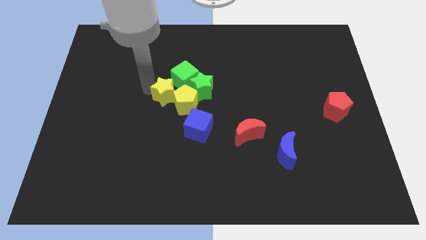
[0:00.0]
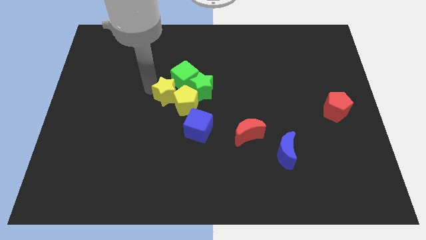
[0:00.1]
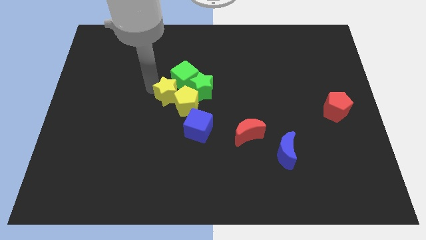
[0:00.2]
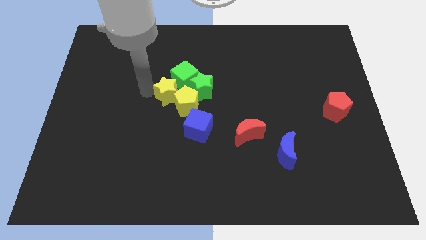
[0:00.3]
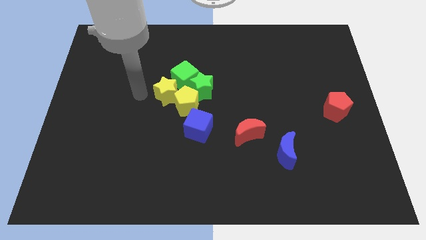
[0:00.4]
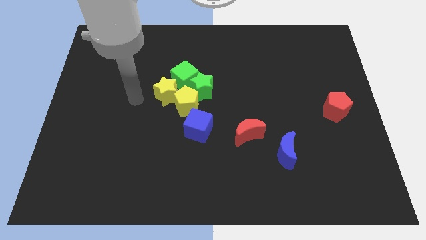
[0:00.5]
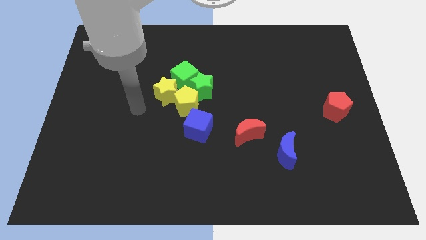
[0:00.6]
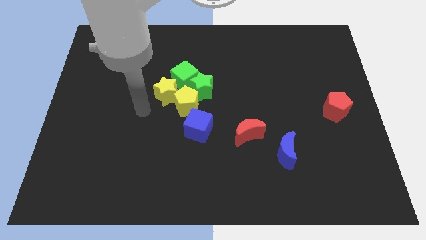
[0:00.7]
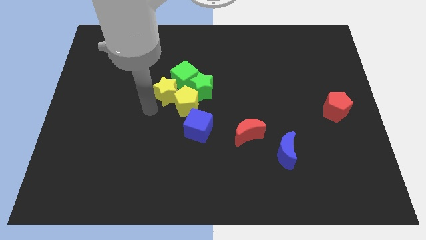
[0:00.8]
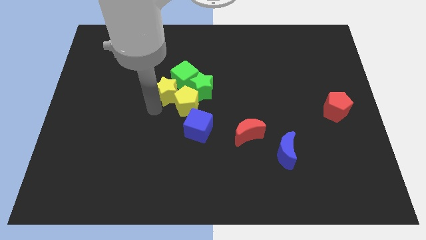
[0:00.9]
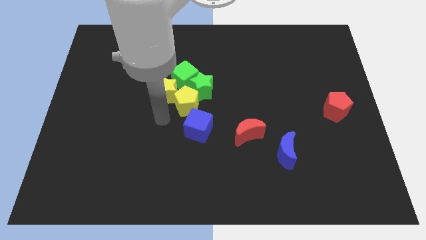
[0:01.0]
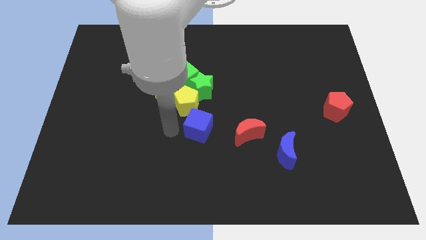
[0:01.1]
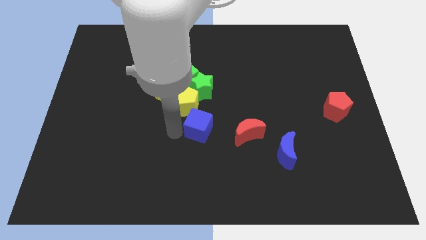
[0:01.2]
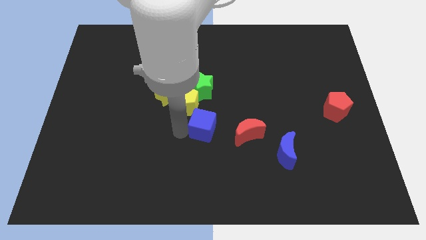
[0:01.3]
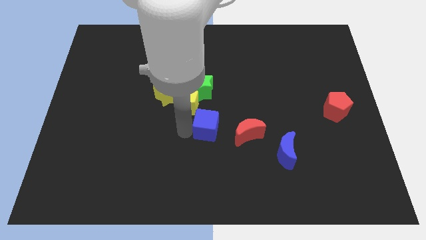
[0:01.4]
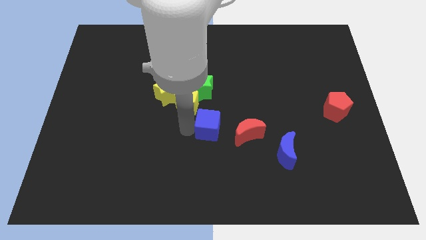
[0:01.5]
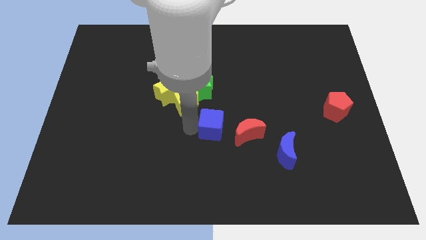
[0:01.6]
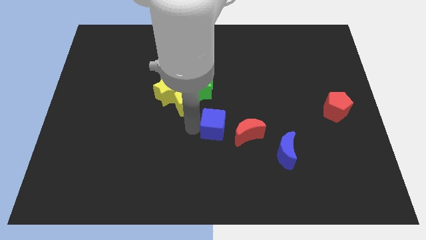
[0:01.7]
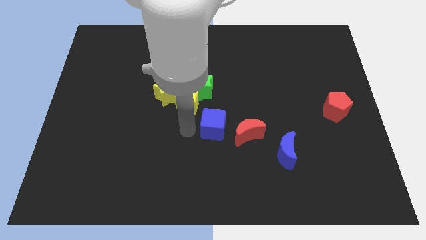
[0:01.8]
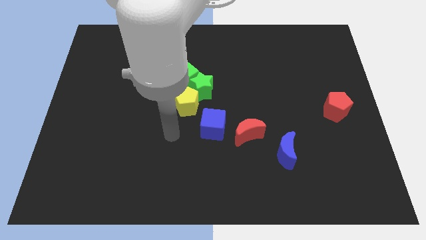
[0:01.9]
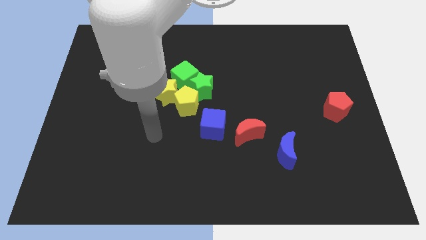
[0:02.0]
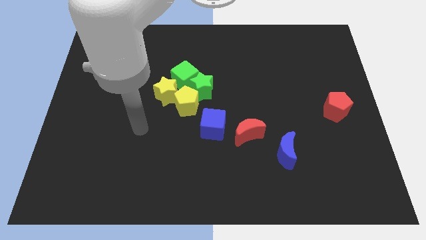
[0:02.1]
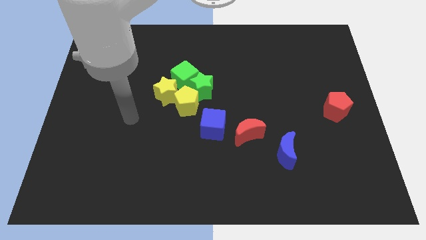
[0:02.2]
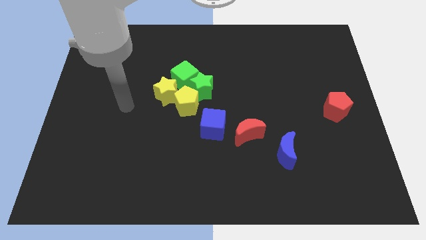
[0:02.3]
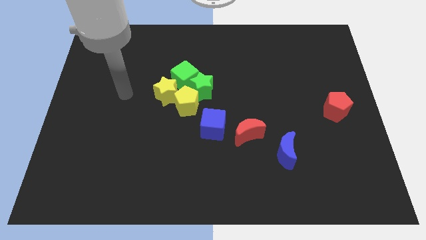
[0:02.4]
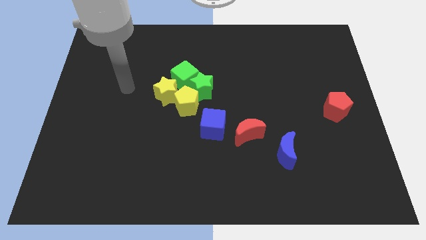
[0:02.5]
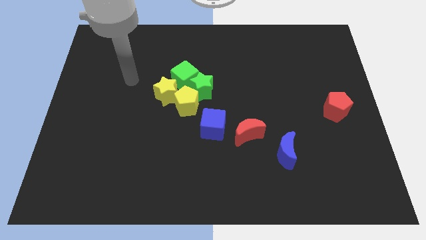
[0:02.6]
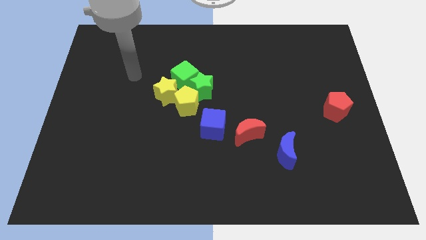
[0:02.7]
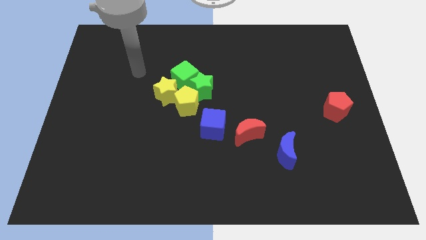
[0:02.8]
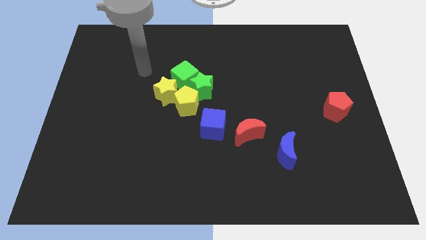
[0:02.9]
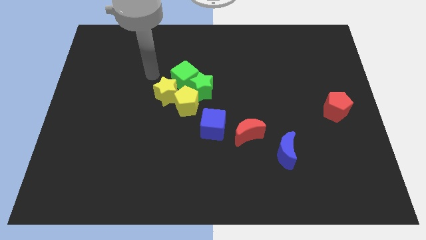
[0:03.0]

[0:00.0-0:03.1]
move the blue cube diagonally bottom right to the green star

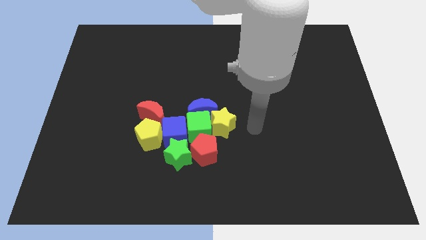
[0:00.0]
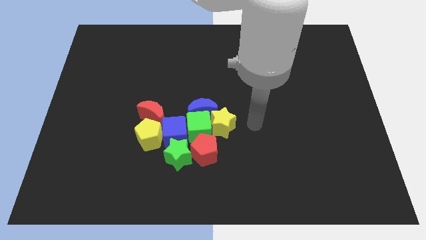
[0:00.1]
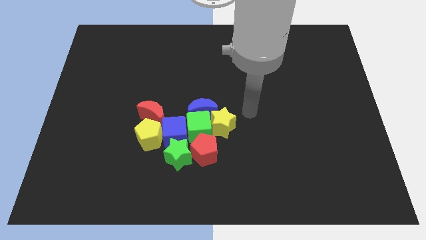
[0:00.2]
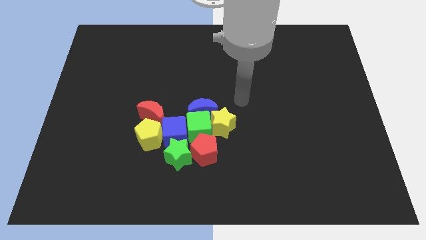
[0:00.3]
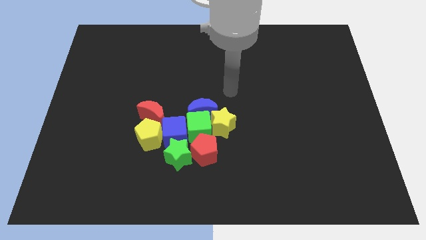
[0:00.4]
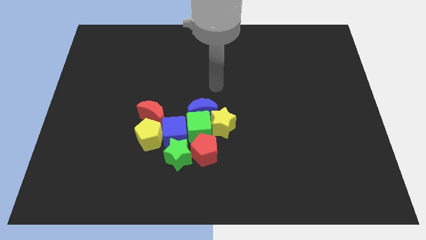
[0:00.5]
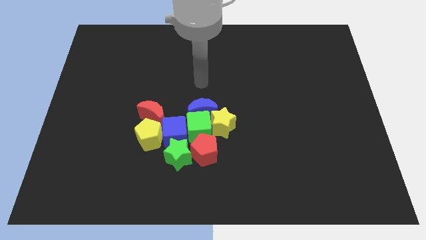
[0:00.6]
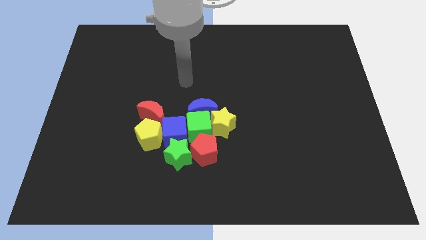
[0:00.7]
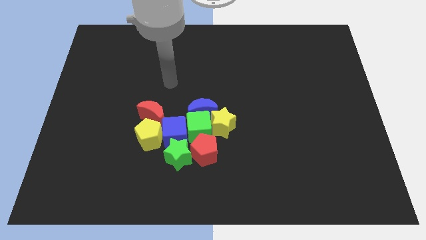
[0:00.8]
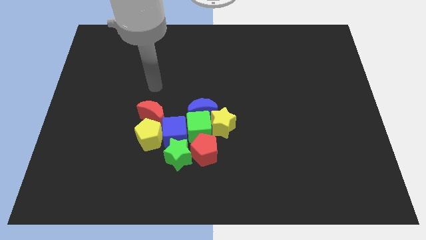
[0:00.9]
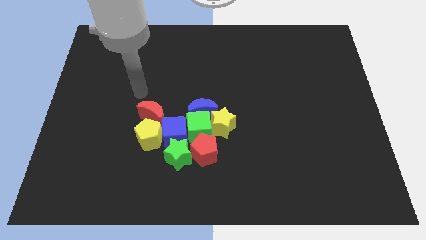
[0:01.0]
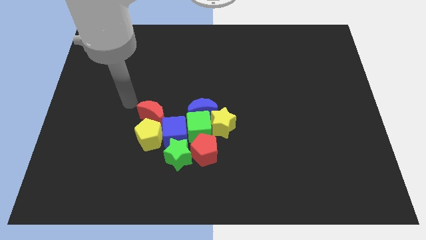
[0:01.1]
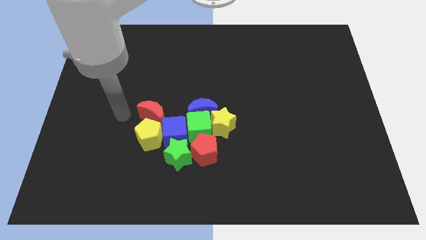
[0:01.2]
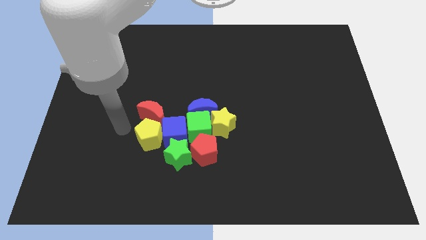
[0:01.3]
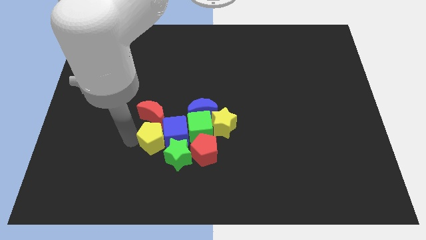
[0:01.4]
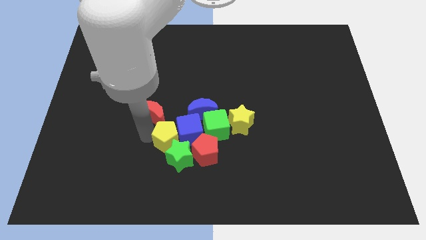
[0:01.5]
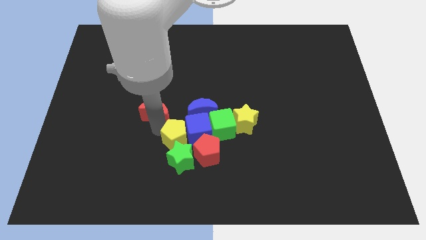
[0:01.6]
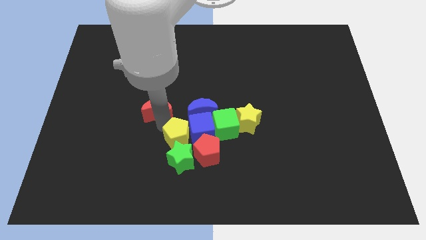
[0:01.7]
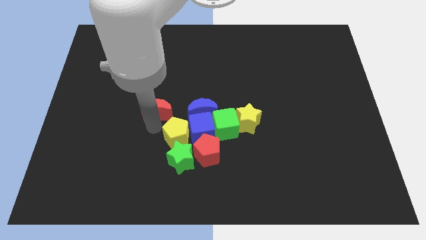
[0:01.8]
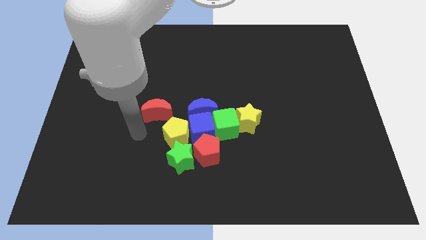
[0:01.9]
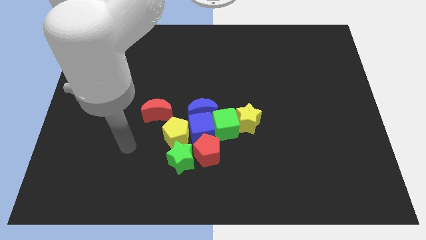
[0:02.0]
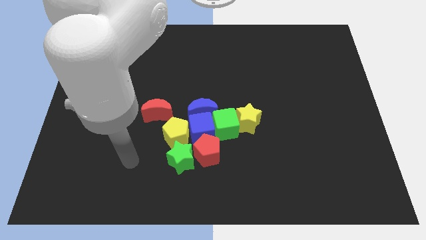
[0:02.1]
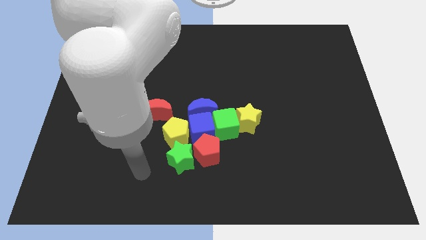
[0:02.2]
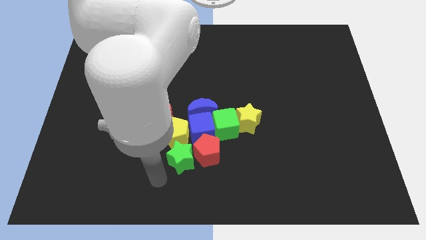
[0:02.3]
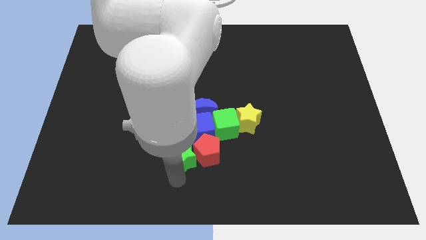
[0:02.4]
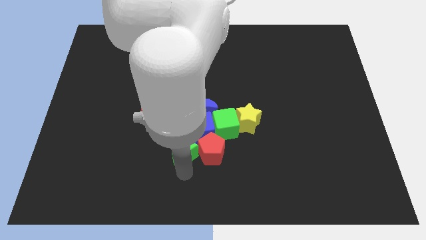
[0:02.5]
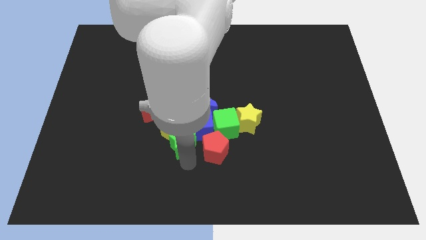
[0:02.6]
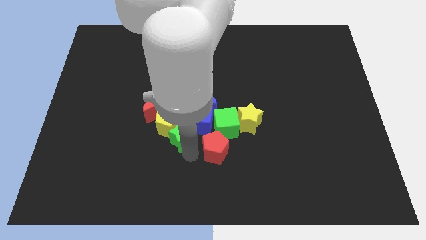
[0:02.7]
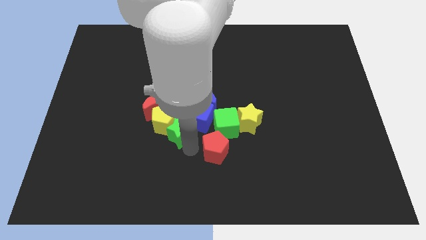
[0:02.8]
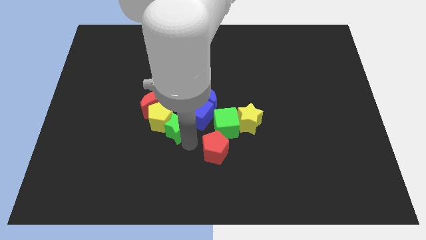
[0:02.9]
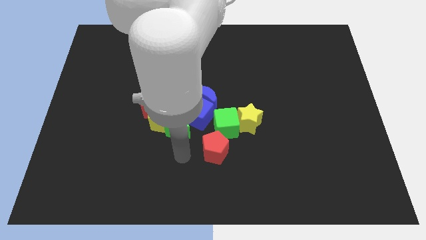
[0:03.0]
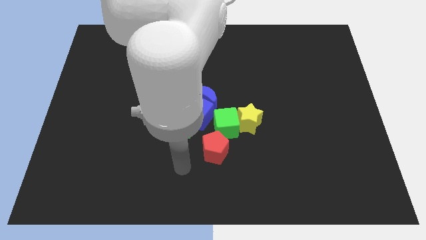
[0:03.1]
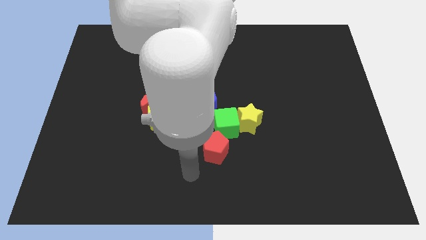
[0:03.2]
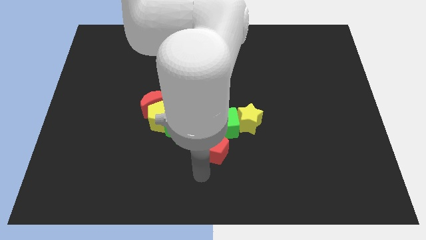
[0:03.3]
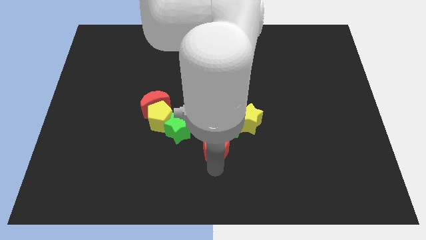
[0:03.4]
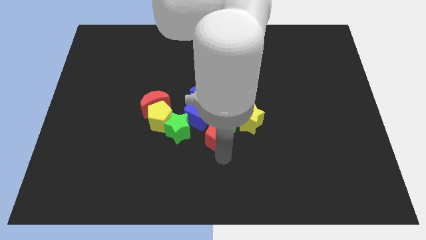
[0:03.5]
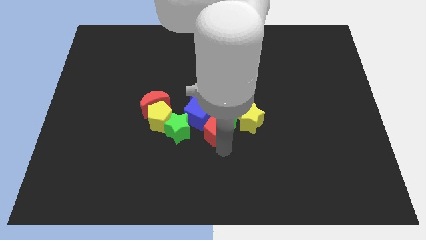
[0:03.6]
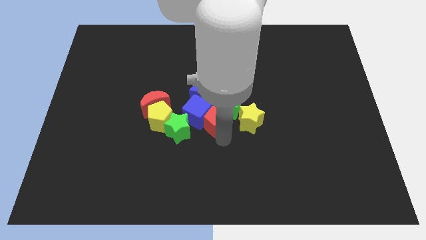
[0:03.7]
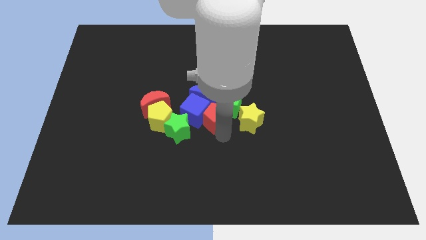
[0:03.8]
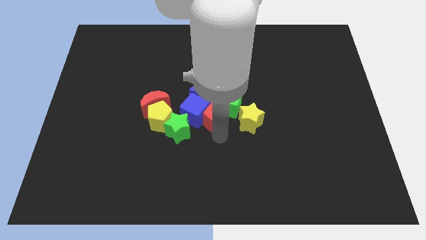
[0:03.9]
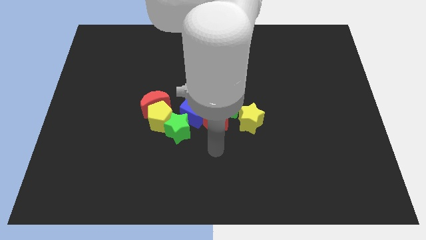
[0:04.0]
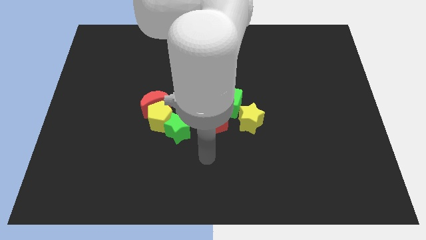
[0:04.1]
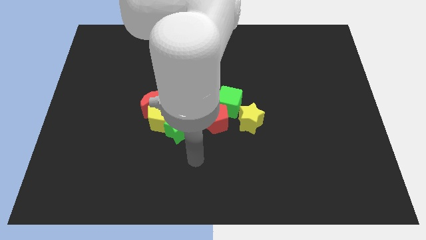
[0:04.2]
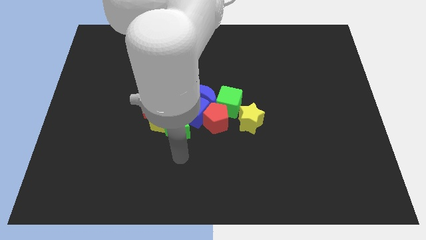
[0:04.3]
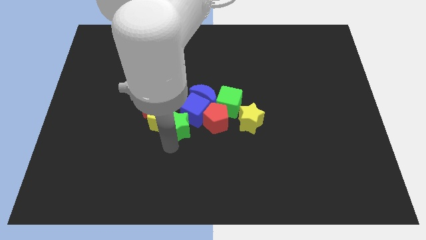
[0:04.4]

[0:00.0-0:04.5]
slide the group of objects to the center of the table

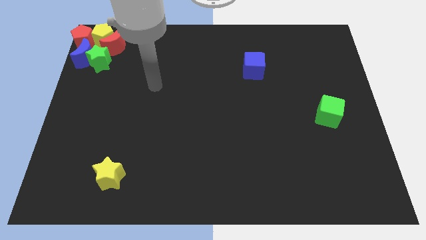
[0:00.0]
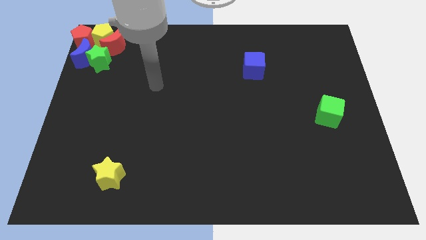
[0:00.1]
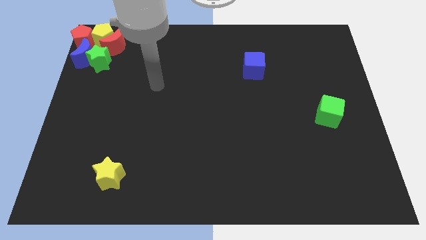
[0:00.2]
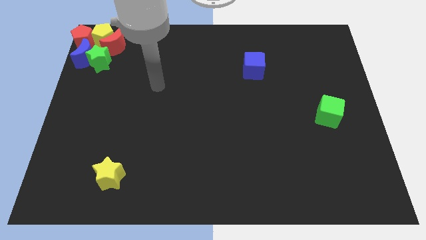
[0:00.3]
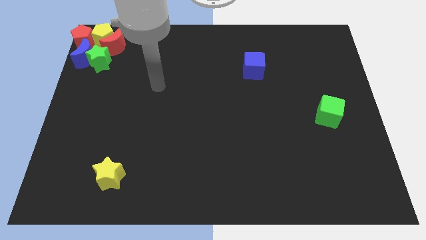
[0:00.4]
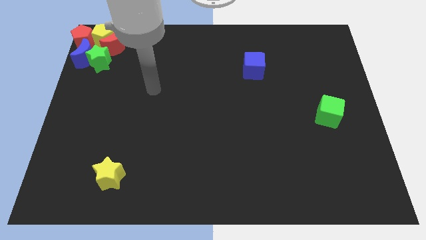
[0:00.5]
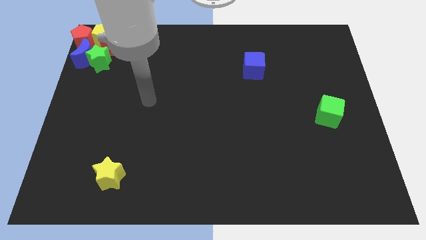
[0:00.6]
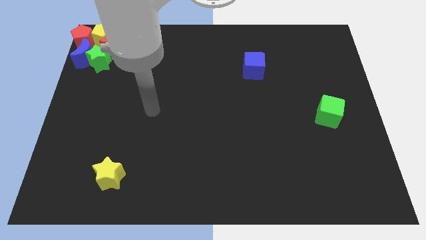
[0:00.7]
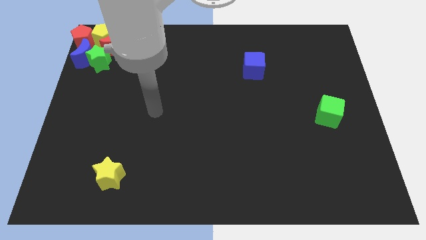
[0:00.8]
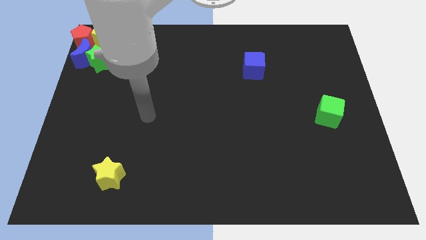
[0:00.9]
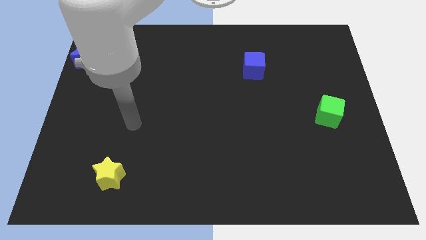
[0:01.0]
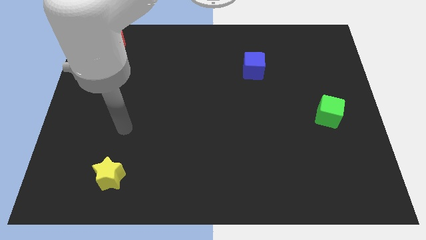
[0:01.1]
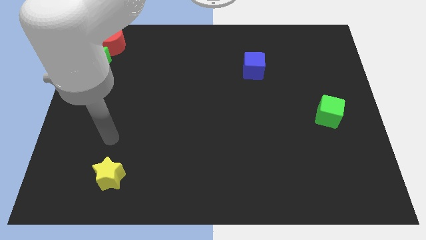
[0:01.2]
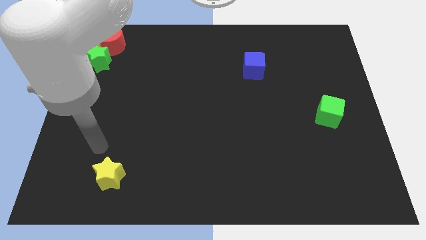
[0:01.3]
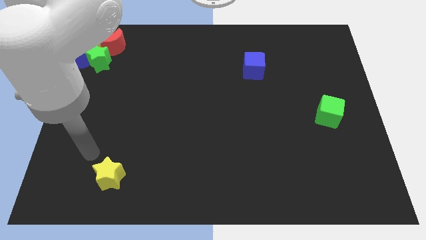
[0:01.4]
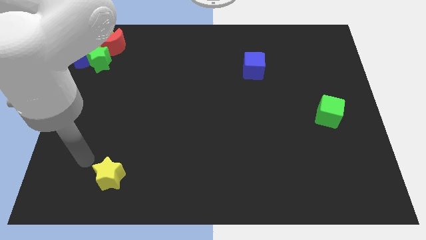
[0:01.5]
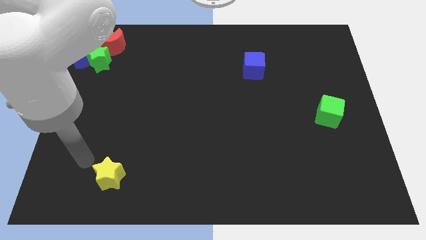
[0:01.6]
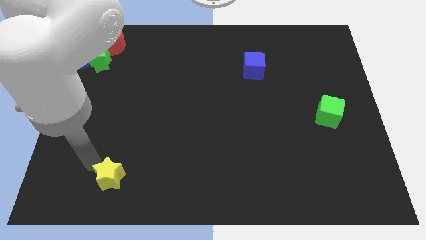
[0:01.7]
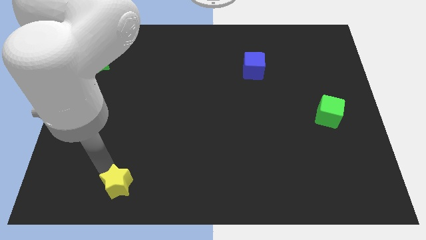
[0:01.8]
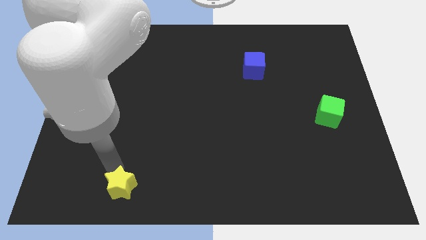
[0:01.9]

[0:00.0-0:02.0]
move your arm to yellow star
